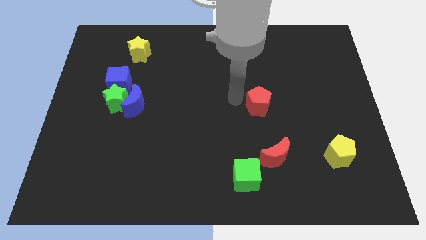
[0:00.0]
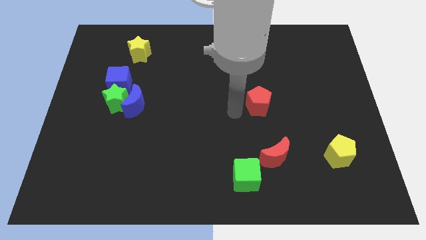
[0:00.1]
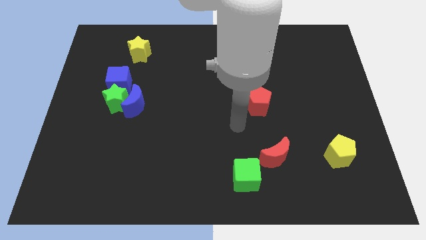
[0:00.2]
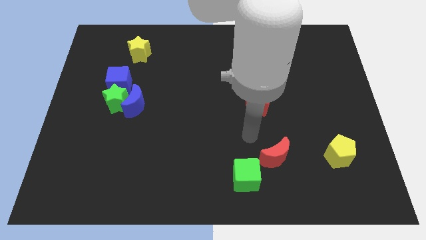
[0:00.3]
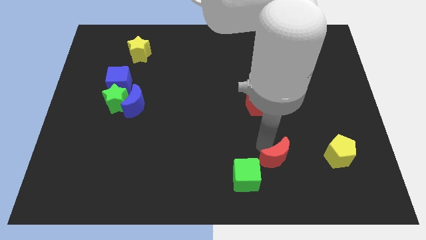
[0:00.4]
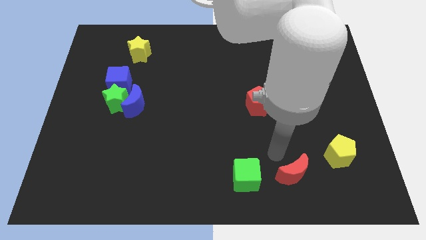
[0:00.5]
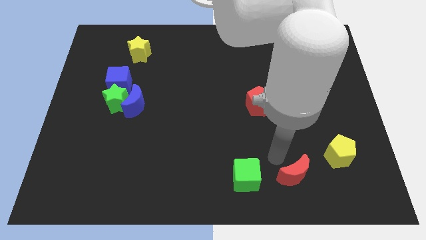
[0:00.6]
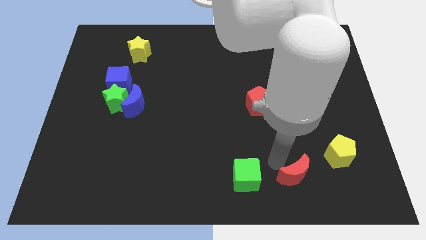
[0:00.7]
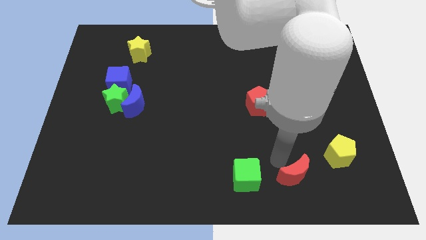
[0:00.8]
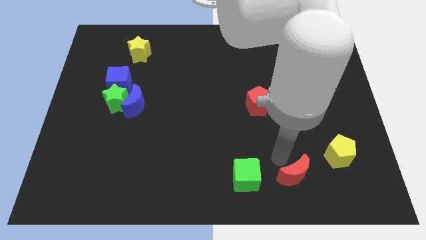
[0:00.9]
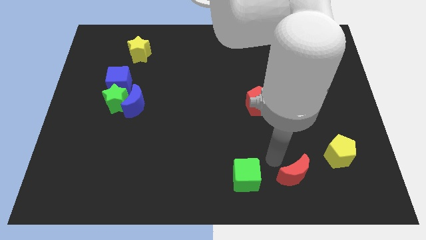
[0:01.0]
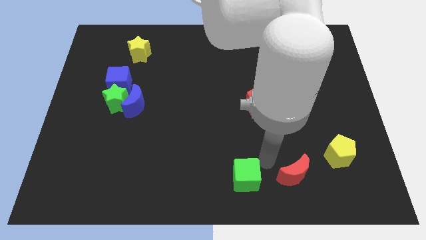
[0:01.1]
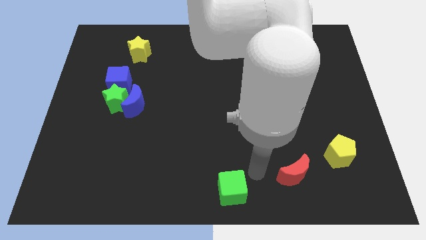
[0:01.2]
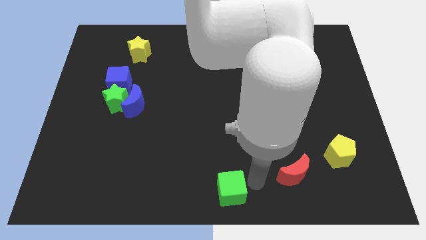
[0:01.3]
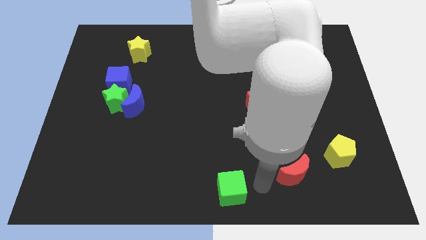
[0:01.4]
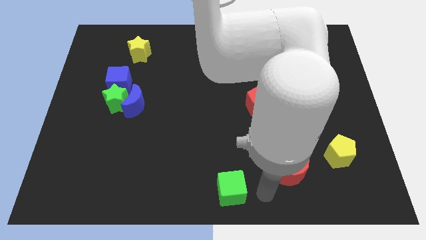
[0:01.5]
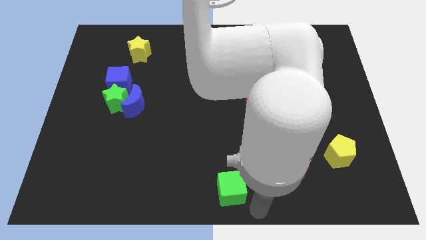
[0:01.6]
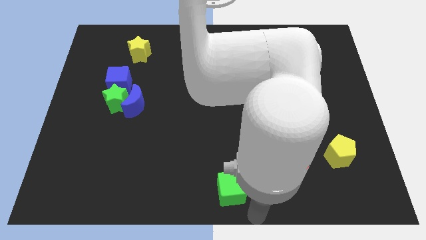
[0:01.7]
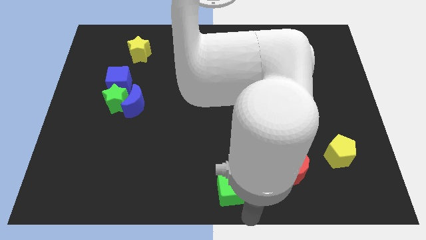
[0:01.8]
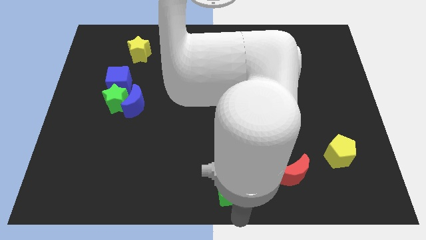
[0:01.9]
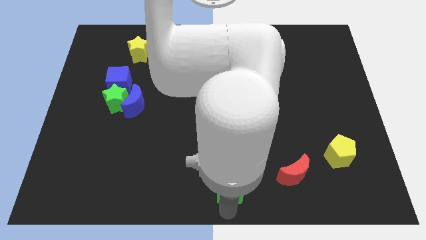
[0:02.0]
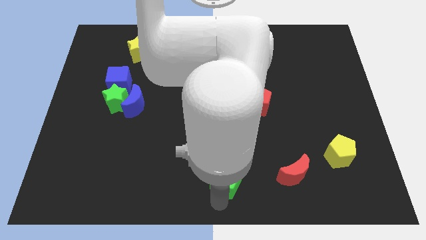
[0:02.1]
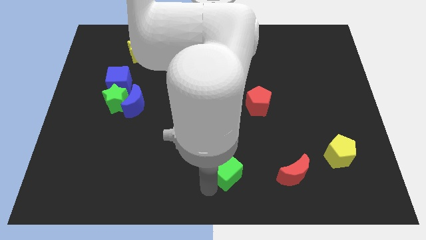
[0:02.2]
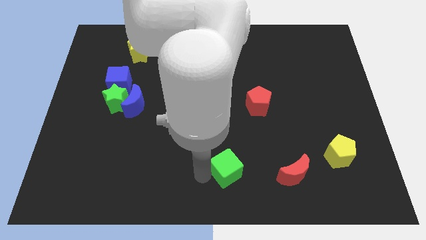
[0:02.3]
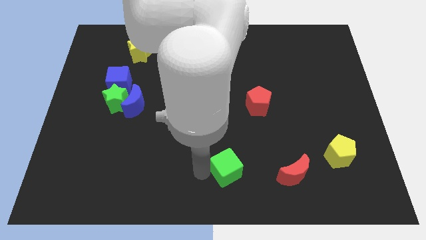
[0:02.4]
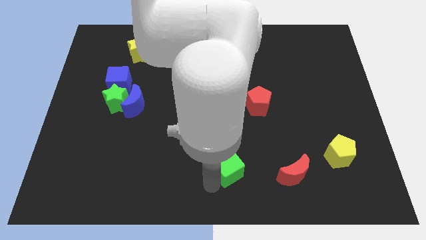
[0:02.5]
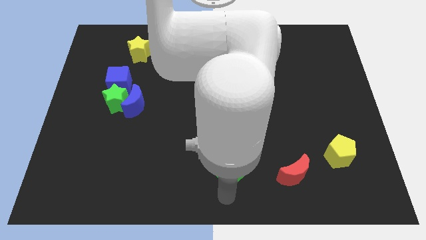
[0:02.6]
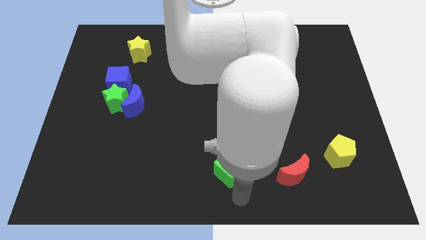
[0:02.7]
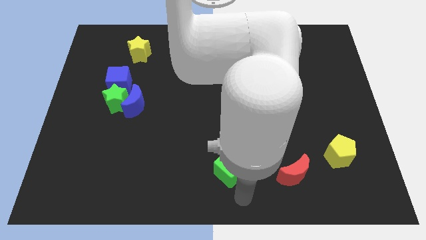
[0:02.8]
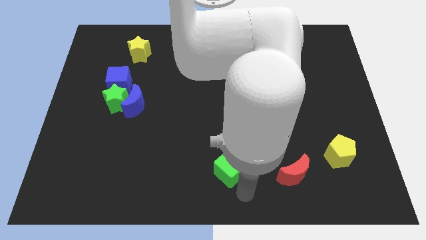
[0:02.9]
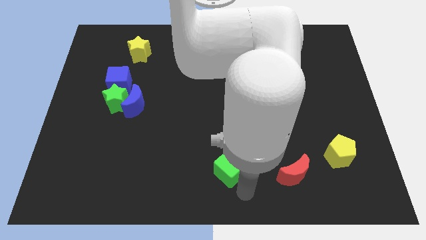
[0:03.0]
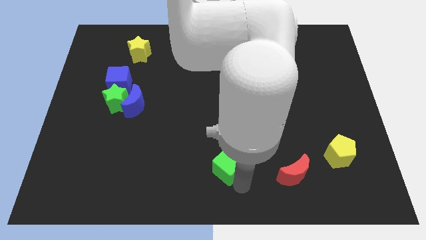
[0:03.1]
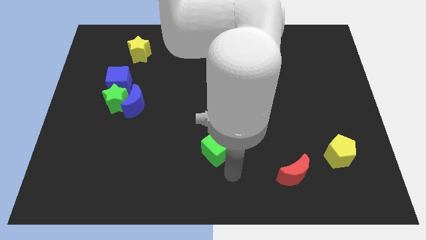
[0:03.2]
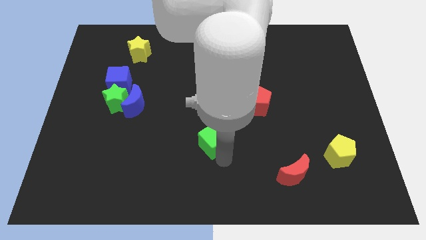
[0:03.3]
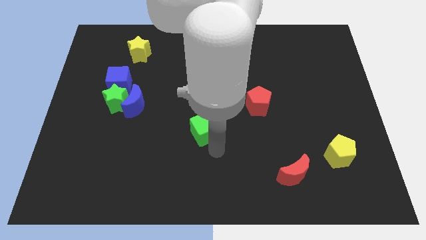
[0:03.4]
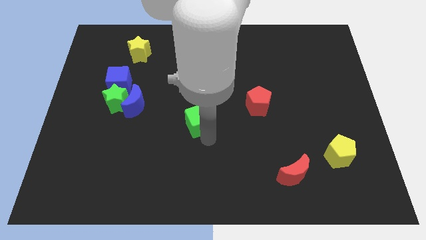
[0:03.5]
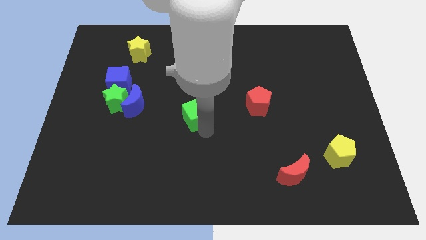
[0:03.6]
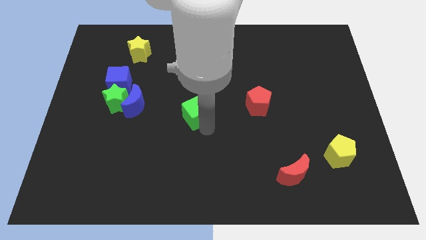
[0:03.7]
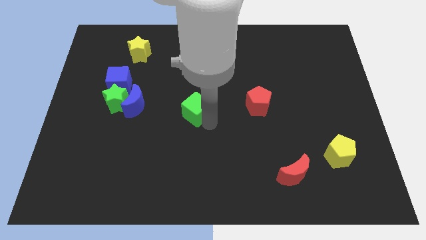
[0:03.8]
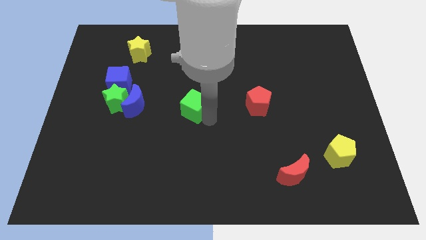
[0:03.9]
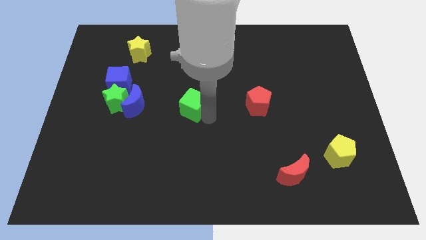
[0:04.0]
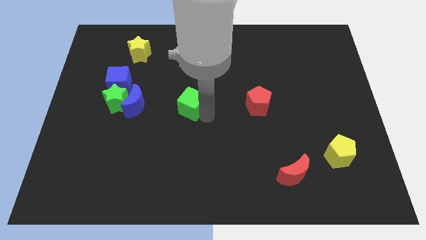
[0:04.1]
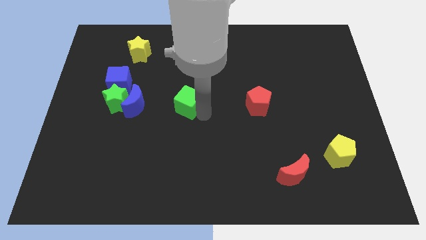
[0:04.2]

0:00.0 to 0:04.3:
slide the green cube in between the red pentagon and blue crescent

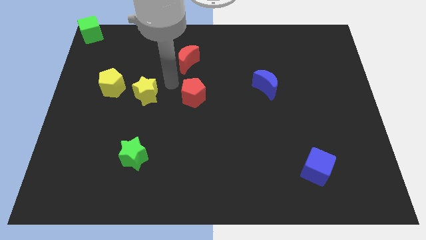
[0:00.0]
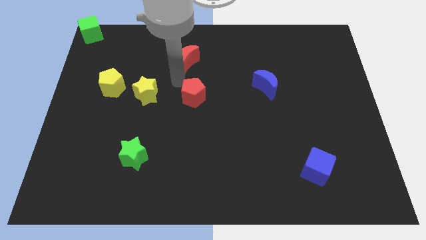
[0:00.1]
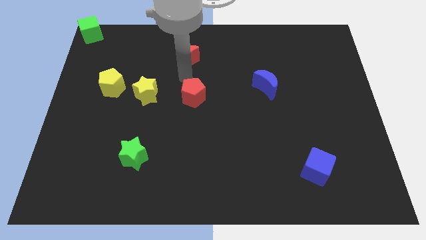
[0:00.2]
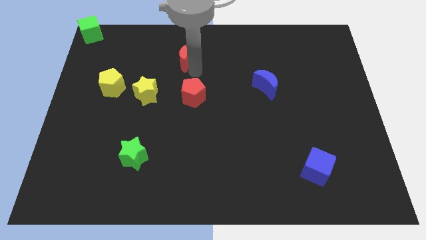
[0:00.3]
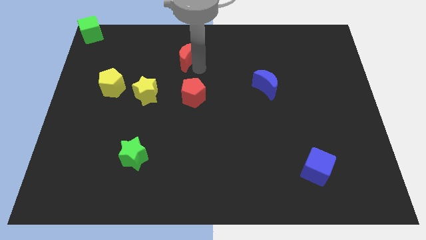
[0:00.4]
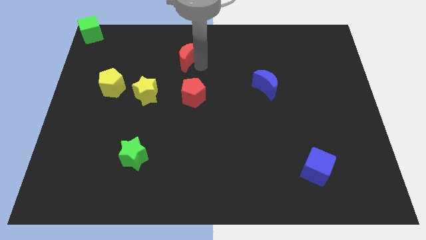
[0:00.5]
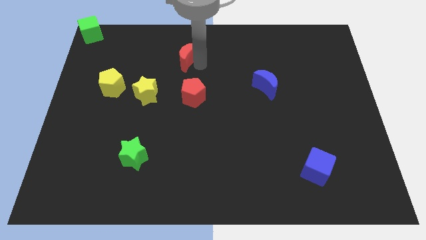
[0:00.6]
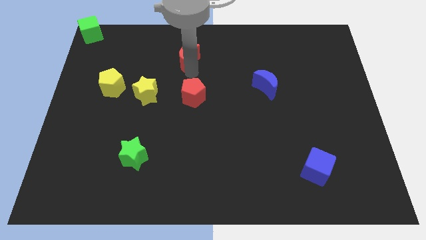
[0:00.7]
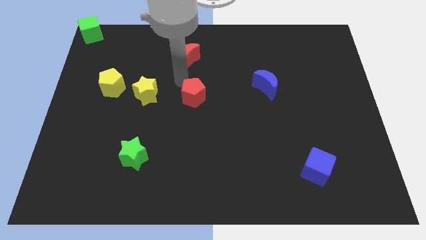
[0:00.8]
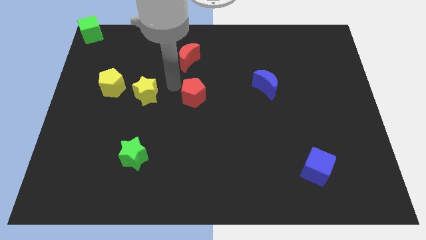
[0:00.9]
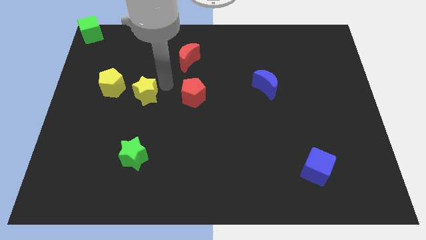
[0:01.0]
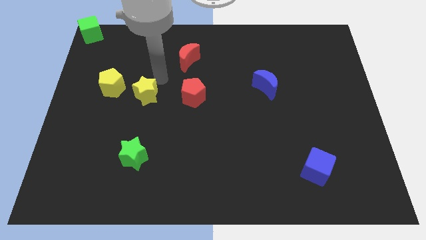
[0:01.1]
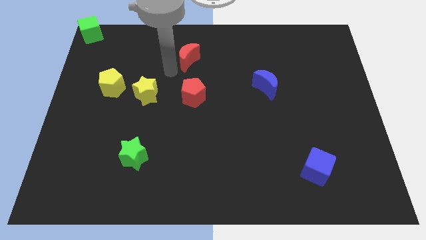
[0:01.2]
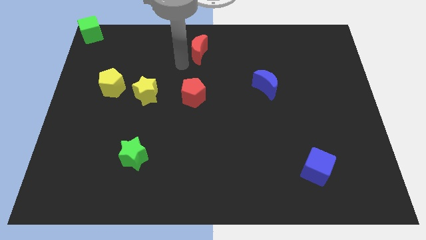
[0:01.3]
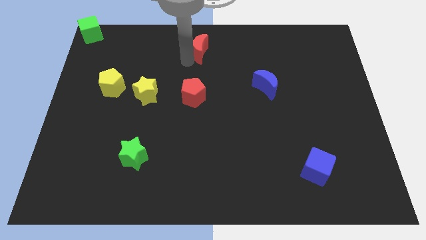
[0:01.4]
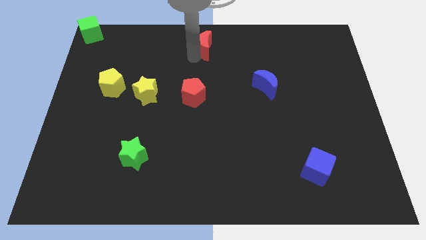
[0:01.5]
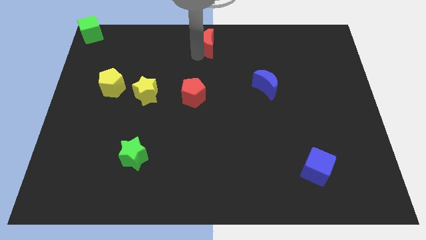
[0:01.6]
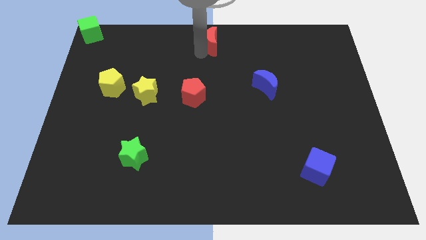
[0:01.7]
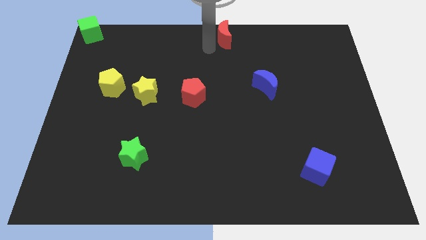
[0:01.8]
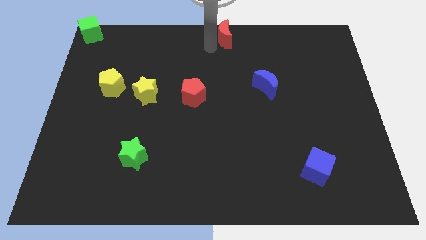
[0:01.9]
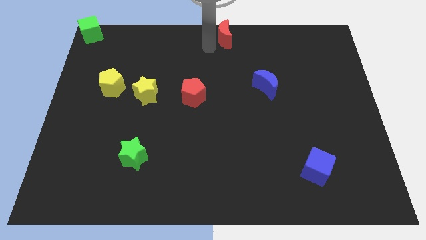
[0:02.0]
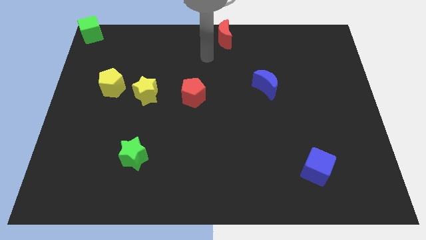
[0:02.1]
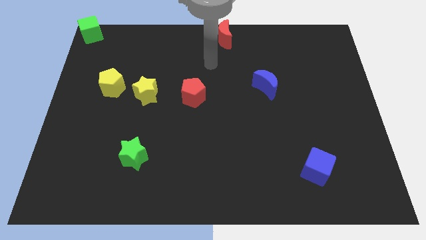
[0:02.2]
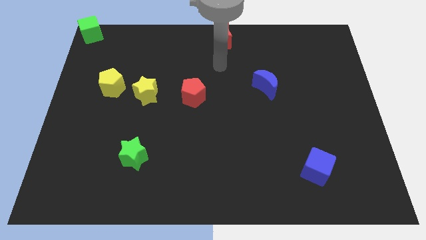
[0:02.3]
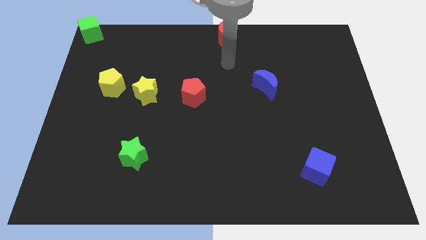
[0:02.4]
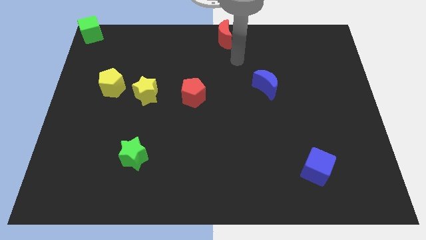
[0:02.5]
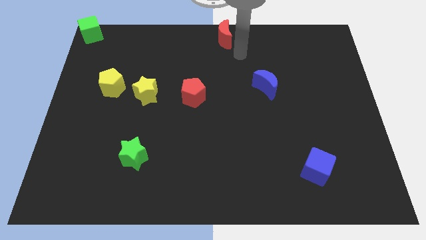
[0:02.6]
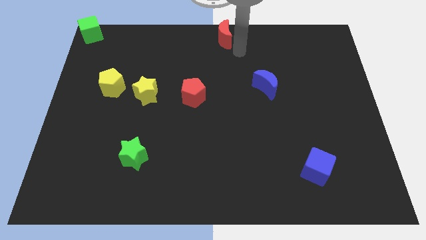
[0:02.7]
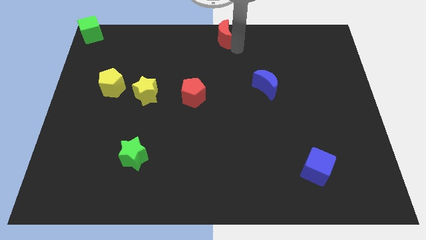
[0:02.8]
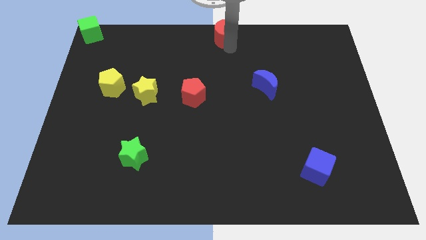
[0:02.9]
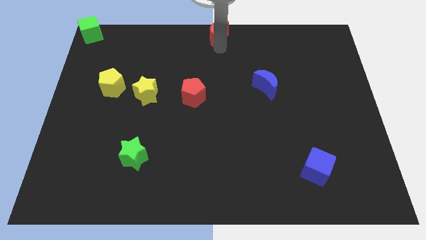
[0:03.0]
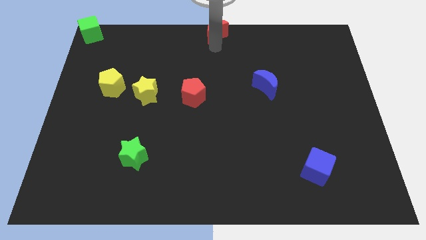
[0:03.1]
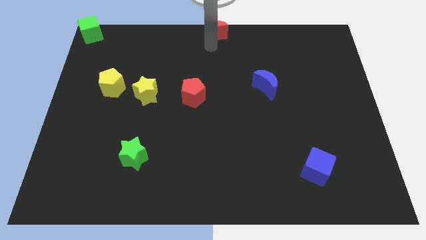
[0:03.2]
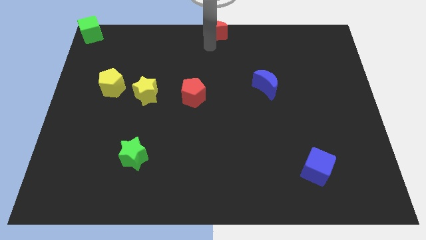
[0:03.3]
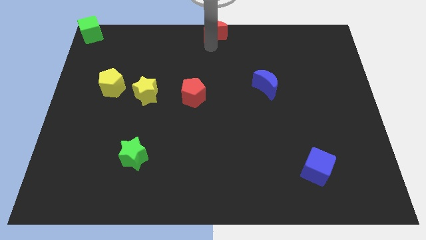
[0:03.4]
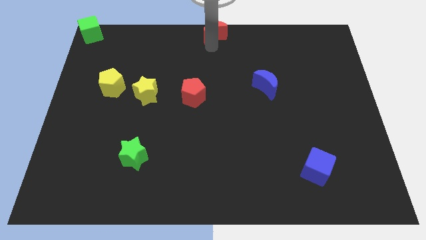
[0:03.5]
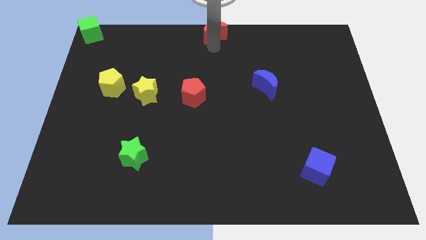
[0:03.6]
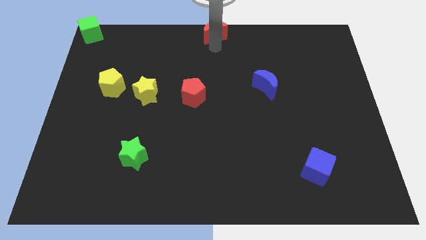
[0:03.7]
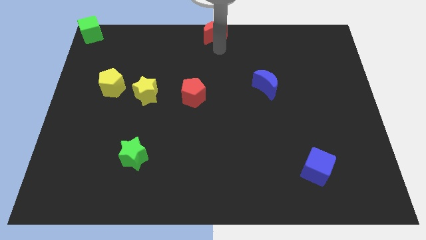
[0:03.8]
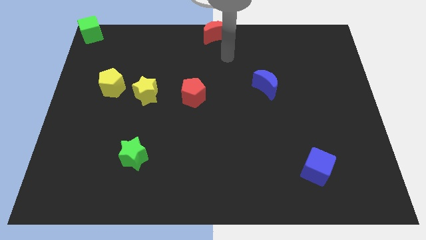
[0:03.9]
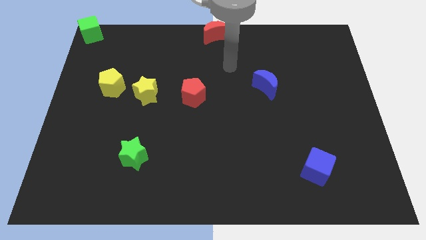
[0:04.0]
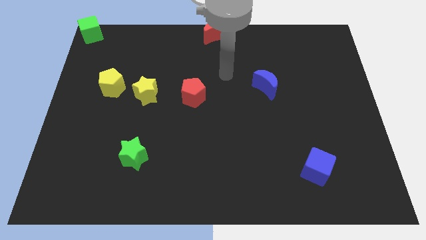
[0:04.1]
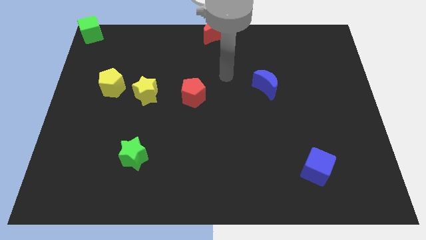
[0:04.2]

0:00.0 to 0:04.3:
push the red moon to the top center of the board

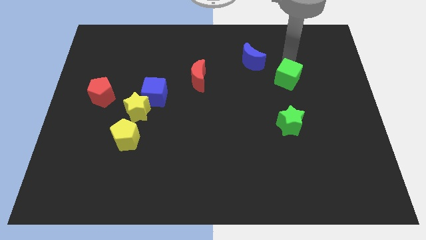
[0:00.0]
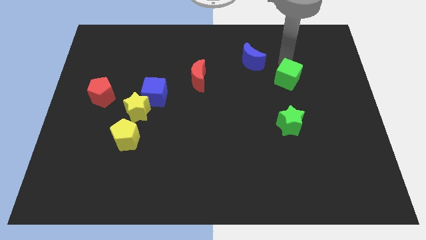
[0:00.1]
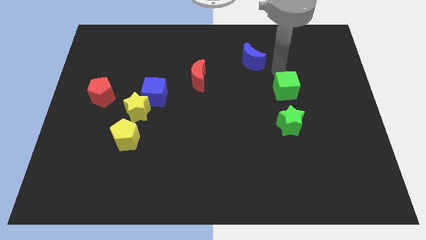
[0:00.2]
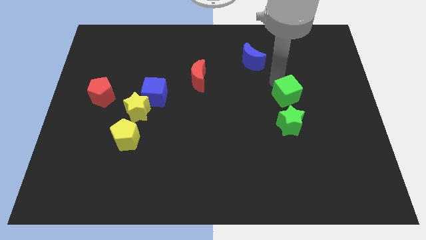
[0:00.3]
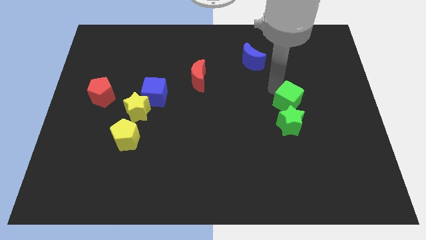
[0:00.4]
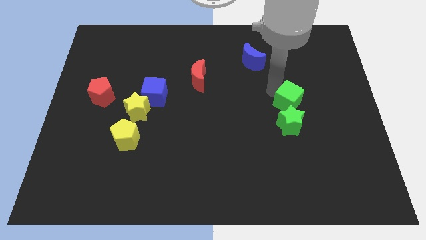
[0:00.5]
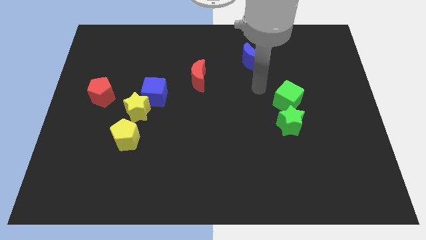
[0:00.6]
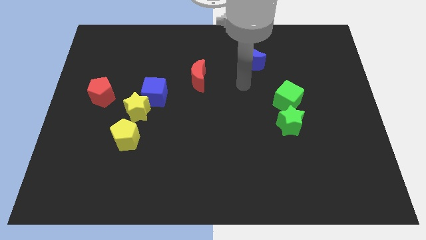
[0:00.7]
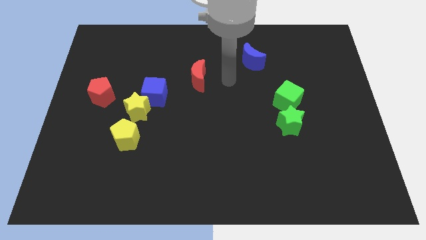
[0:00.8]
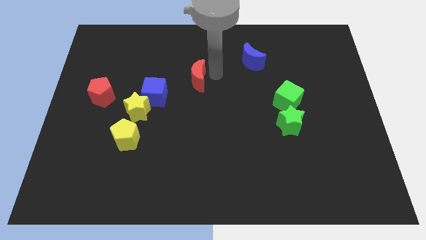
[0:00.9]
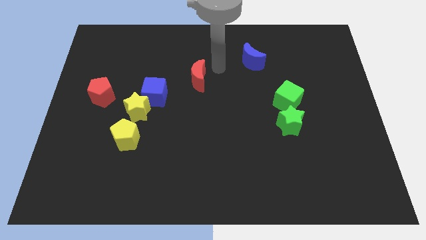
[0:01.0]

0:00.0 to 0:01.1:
place the green cube close to the green star
